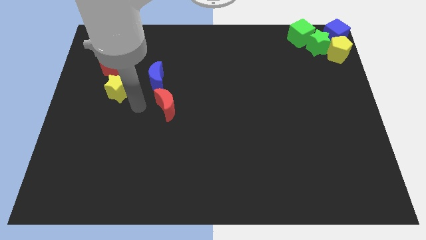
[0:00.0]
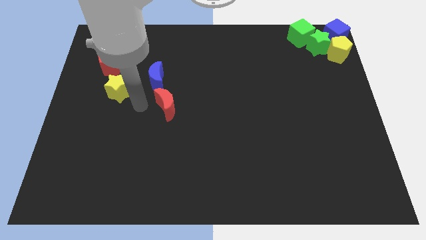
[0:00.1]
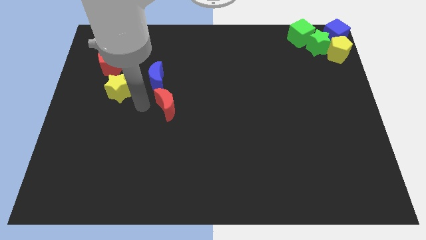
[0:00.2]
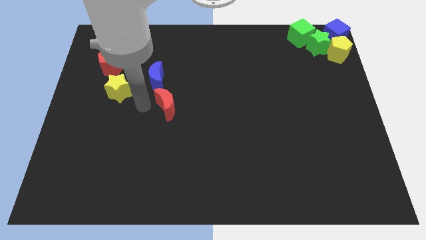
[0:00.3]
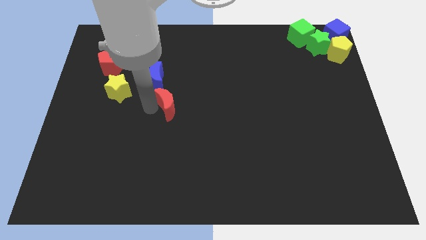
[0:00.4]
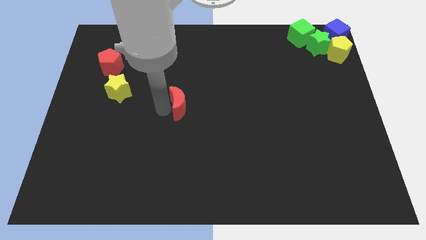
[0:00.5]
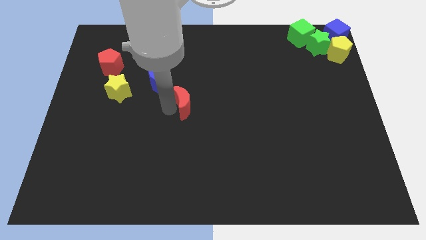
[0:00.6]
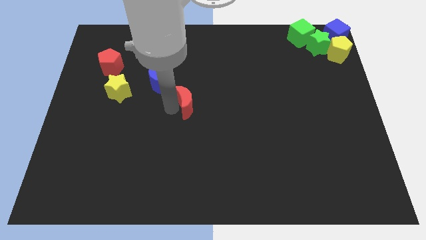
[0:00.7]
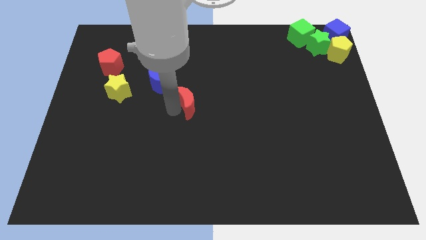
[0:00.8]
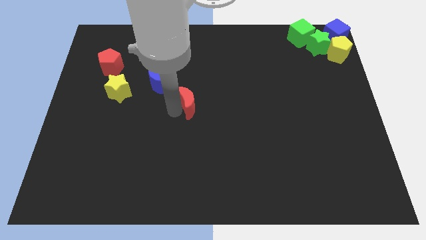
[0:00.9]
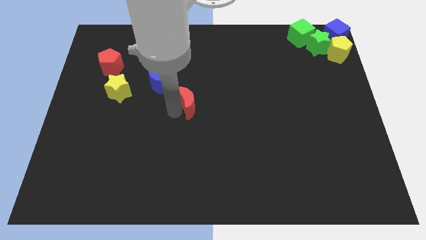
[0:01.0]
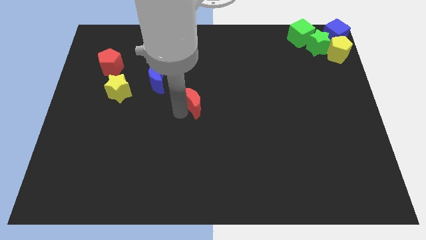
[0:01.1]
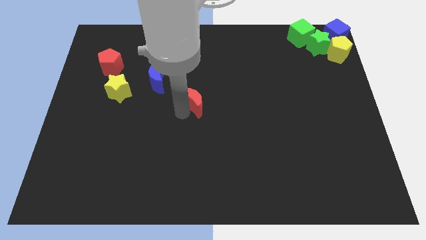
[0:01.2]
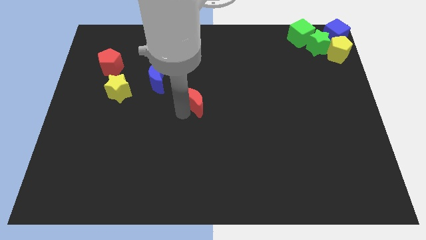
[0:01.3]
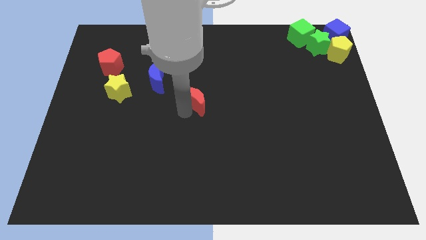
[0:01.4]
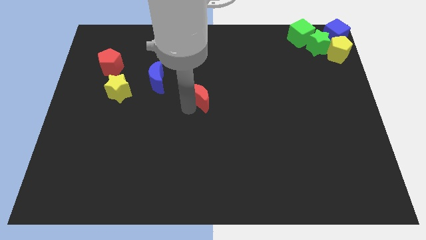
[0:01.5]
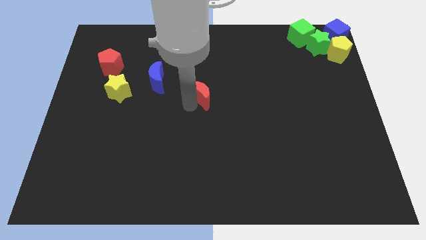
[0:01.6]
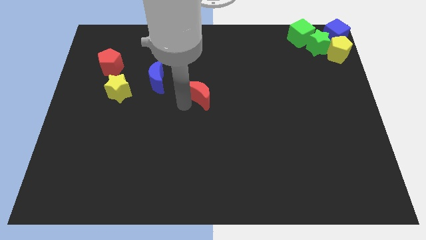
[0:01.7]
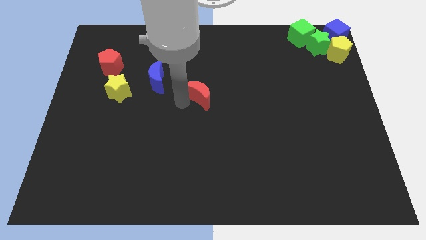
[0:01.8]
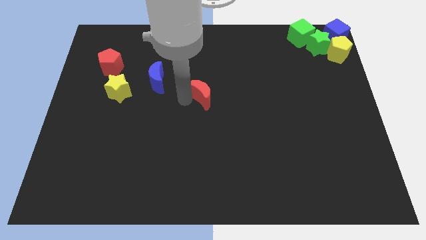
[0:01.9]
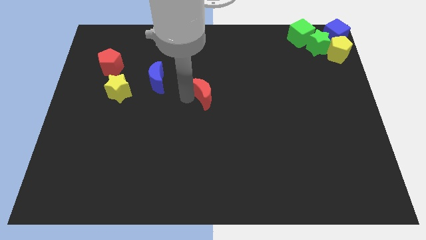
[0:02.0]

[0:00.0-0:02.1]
slightly move the red moon to the center of the board

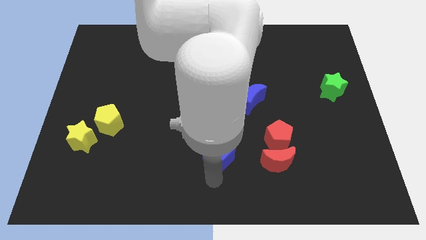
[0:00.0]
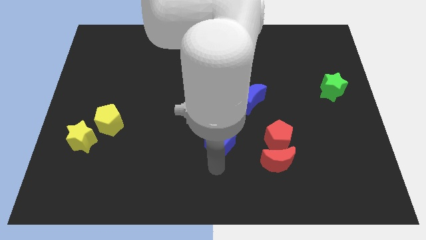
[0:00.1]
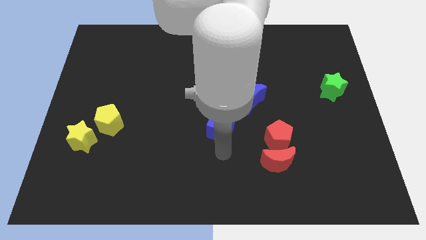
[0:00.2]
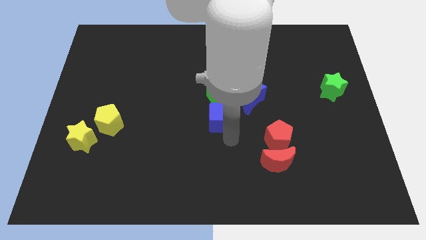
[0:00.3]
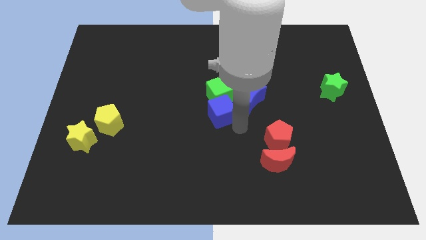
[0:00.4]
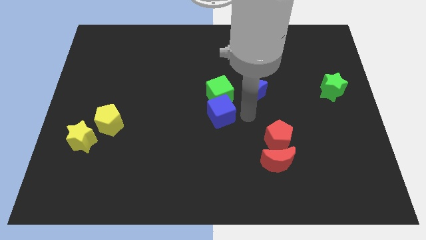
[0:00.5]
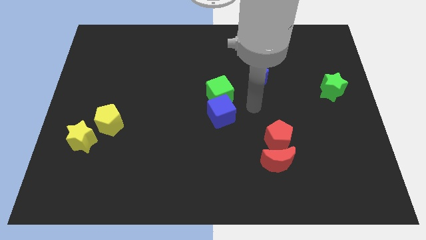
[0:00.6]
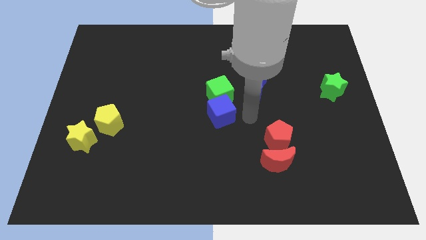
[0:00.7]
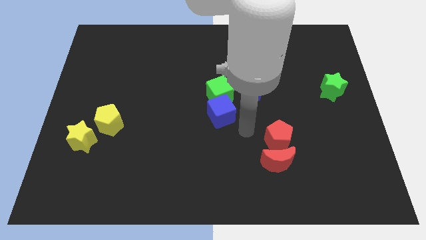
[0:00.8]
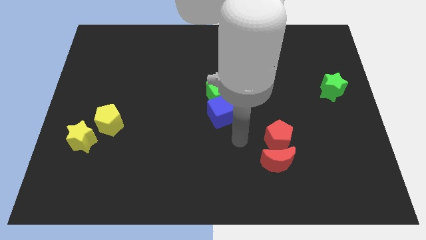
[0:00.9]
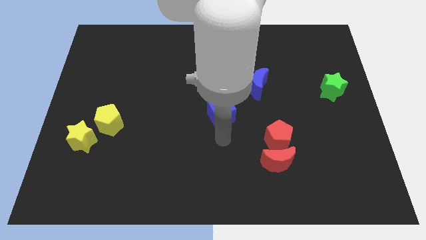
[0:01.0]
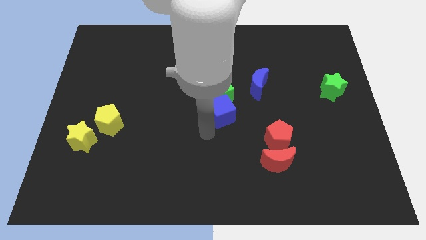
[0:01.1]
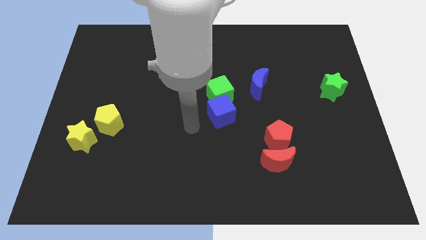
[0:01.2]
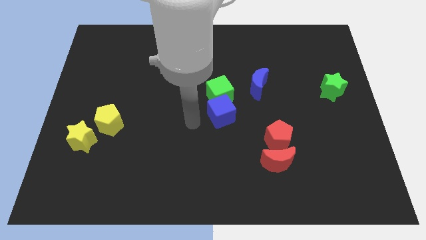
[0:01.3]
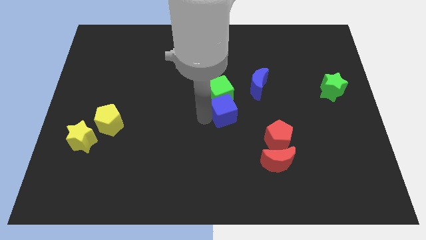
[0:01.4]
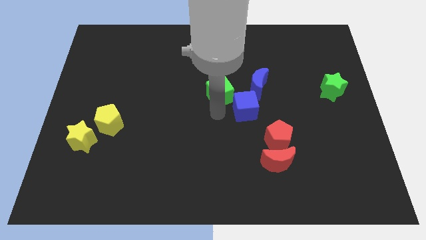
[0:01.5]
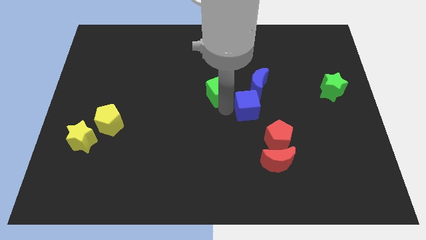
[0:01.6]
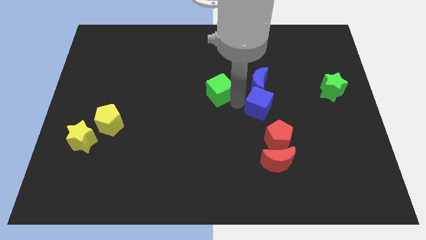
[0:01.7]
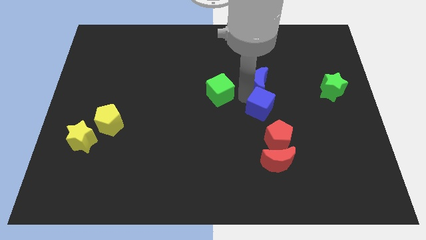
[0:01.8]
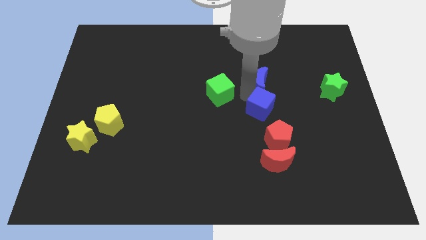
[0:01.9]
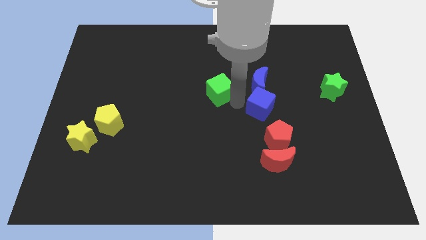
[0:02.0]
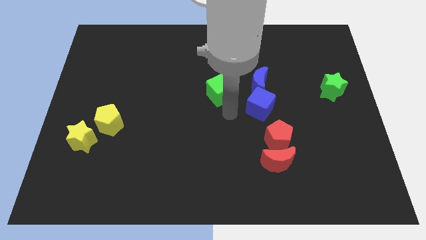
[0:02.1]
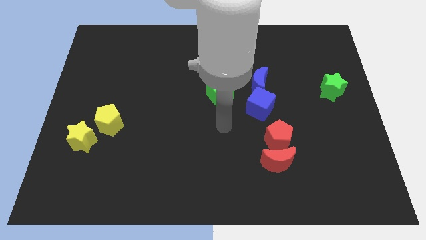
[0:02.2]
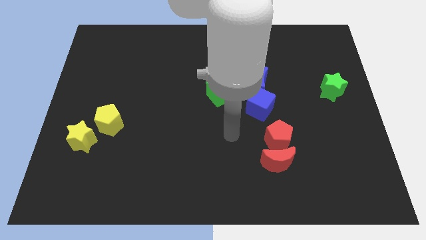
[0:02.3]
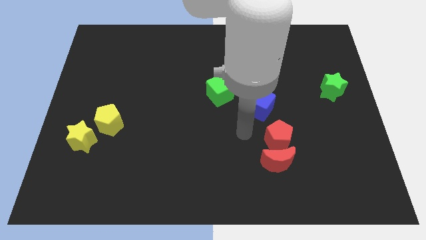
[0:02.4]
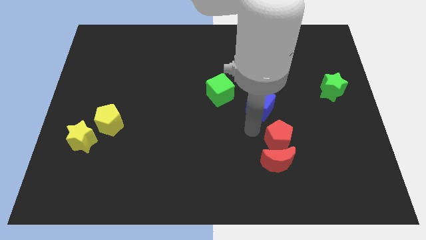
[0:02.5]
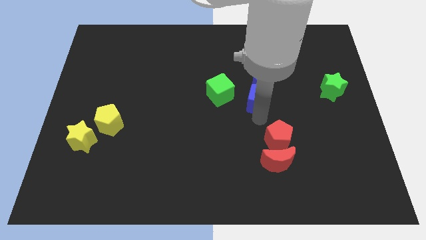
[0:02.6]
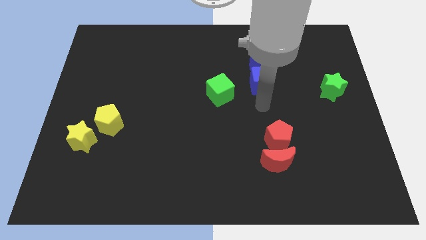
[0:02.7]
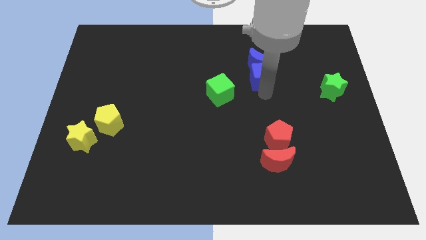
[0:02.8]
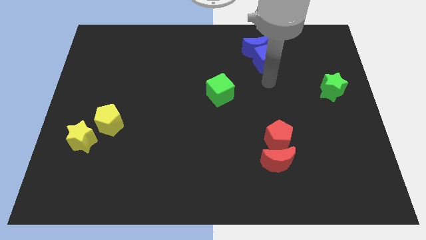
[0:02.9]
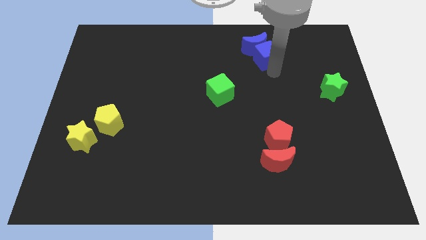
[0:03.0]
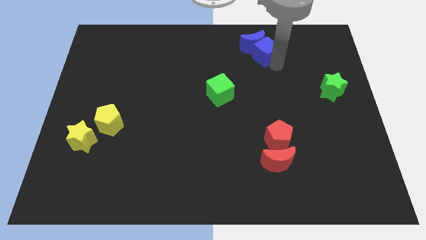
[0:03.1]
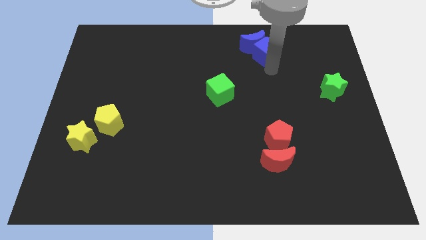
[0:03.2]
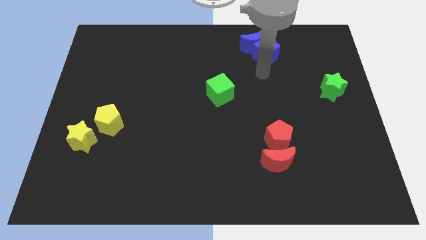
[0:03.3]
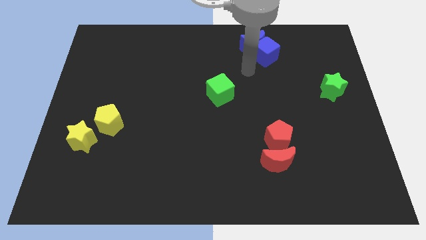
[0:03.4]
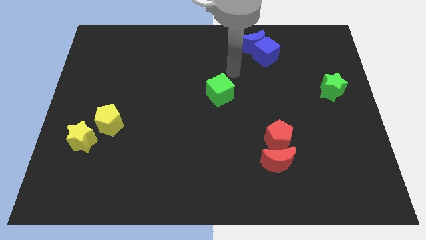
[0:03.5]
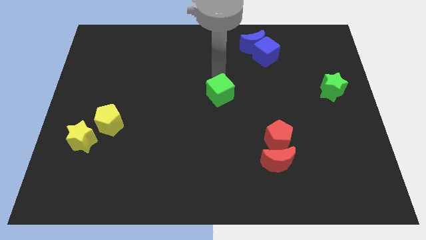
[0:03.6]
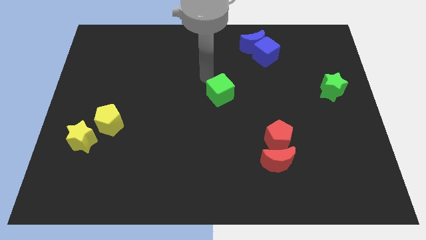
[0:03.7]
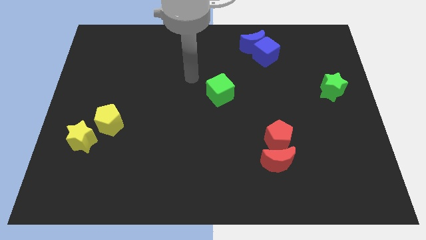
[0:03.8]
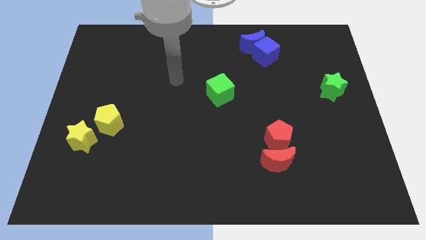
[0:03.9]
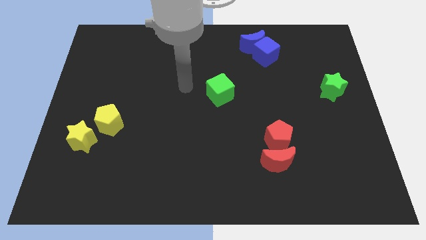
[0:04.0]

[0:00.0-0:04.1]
move the blue blocks towards the top

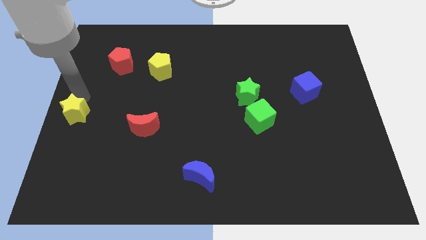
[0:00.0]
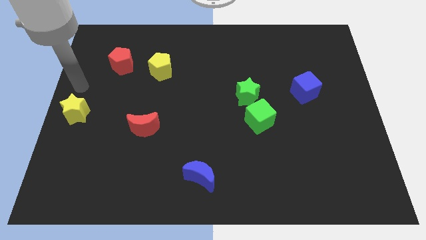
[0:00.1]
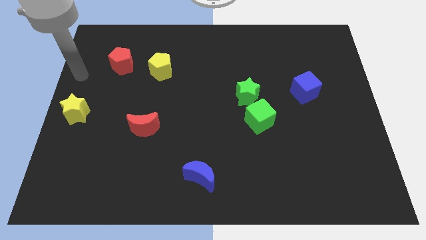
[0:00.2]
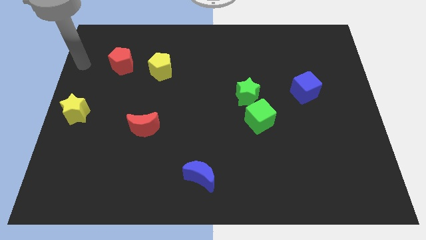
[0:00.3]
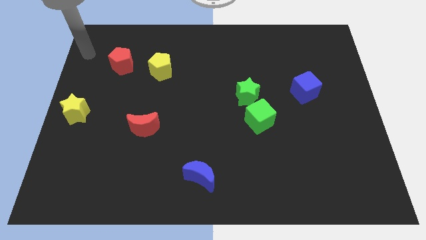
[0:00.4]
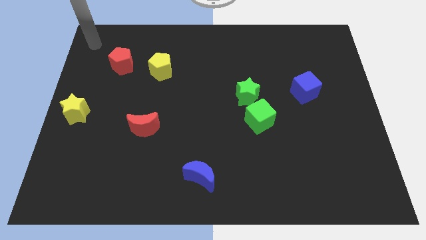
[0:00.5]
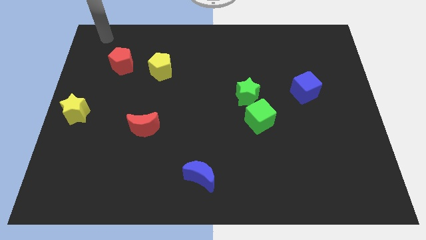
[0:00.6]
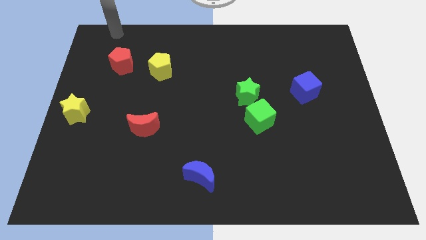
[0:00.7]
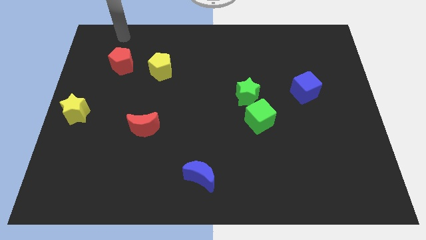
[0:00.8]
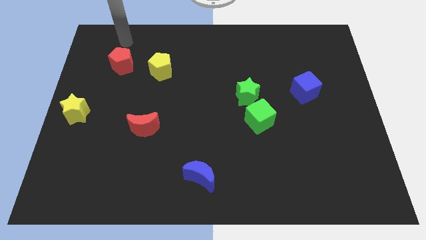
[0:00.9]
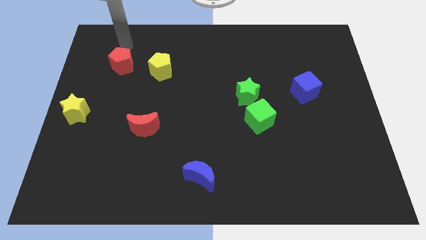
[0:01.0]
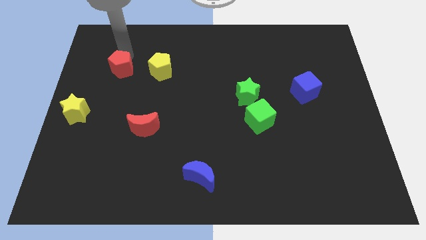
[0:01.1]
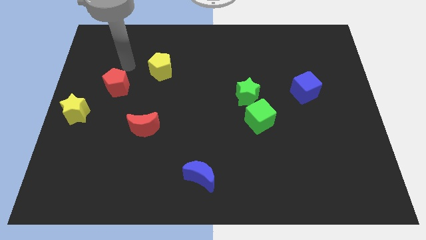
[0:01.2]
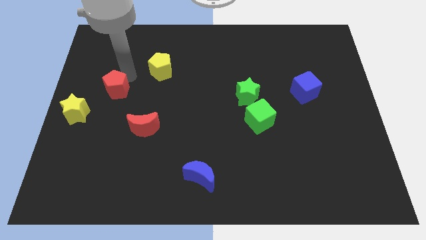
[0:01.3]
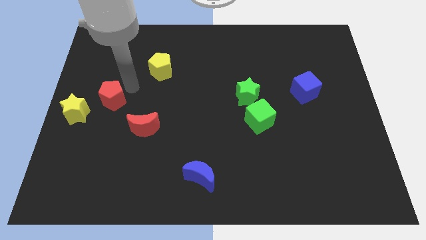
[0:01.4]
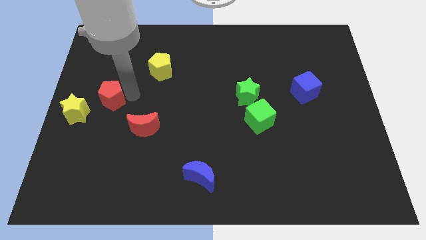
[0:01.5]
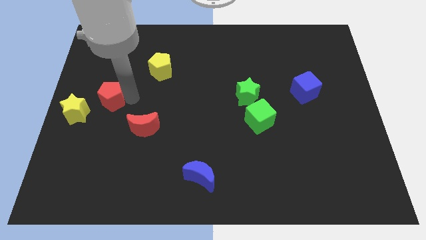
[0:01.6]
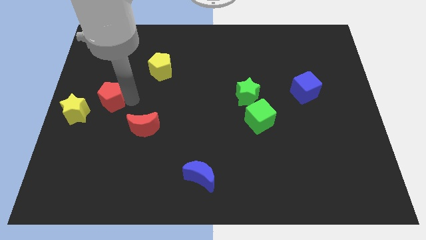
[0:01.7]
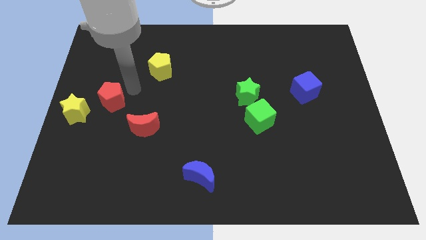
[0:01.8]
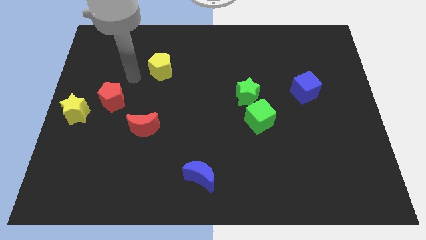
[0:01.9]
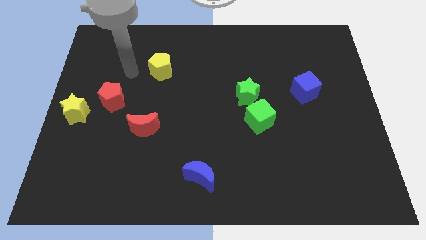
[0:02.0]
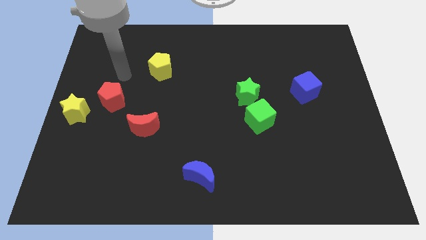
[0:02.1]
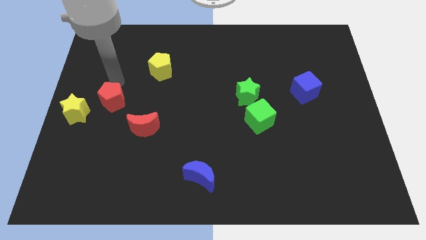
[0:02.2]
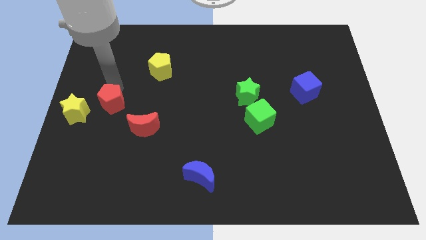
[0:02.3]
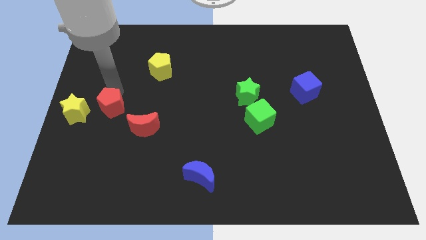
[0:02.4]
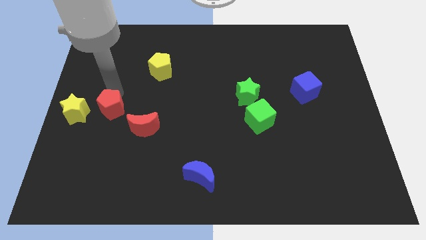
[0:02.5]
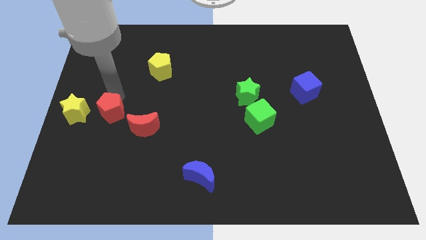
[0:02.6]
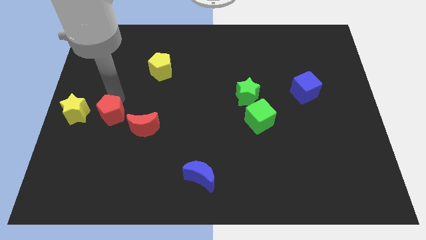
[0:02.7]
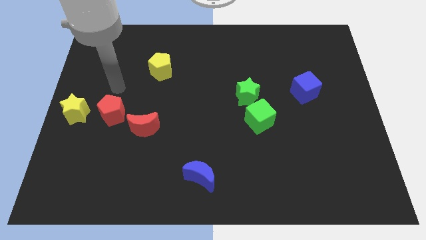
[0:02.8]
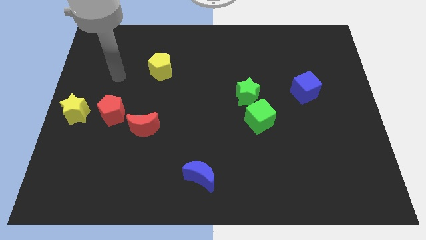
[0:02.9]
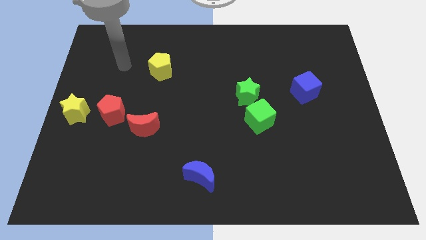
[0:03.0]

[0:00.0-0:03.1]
push the red pentagon in between the red moon and yellow star
